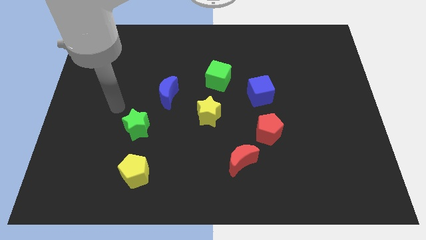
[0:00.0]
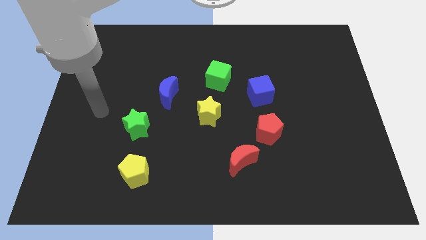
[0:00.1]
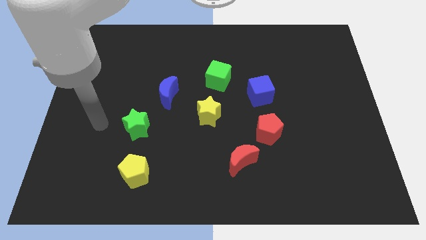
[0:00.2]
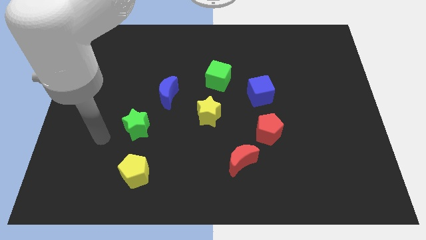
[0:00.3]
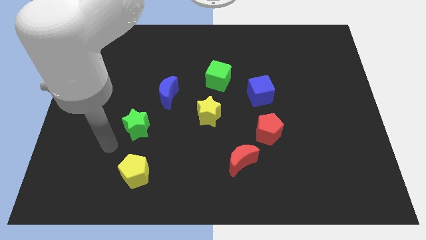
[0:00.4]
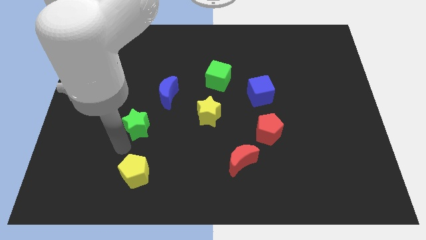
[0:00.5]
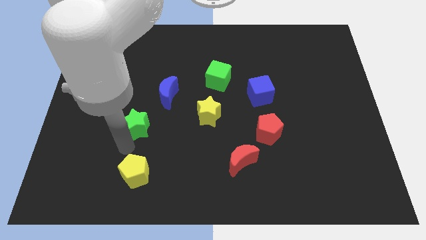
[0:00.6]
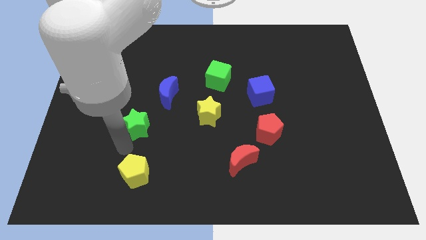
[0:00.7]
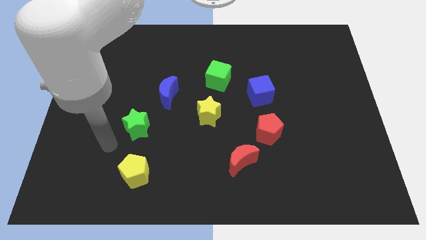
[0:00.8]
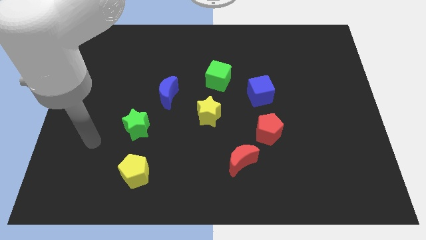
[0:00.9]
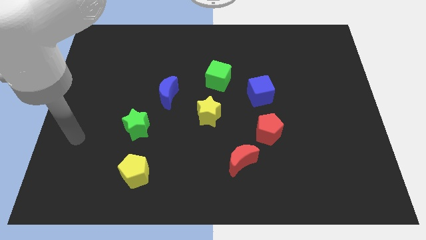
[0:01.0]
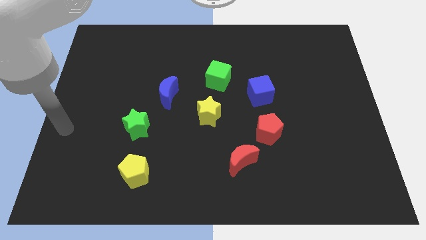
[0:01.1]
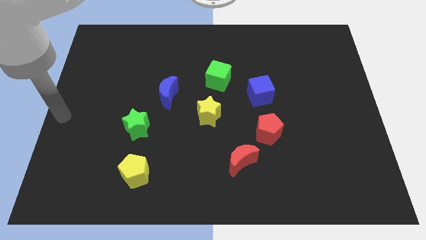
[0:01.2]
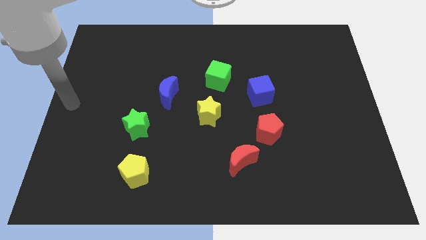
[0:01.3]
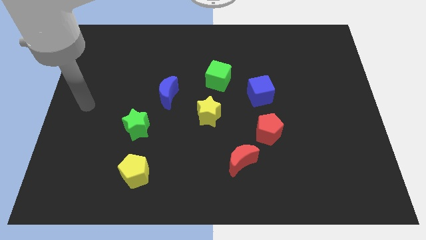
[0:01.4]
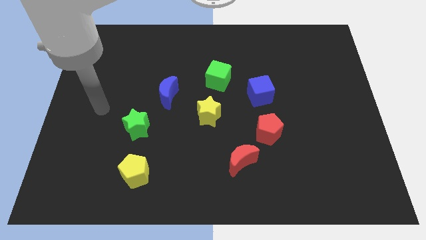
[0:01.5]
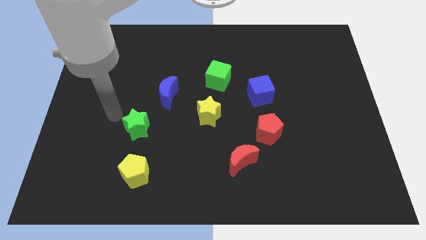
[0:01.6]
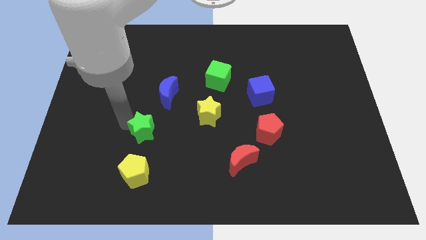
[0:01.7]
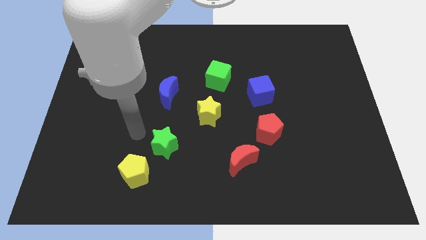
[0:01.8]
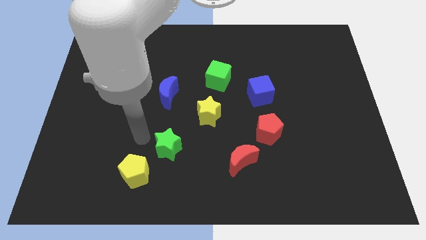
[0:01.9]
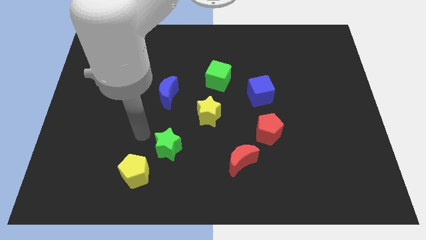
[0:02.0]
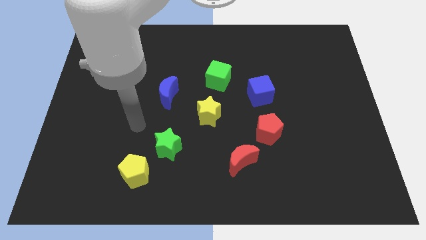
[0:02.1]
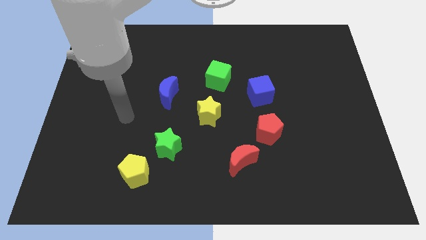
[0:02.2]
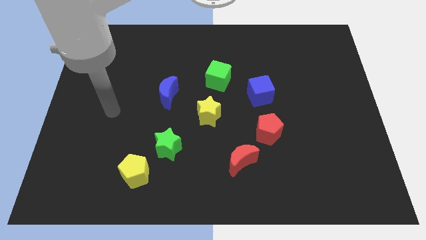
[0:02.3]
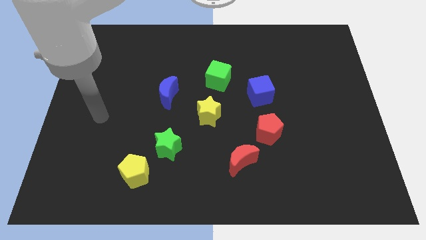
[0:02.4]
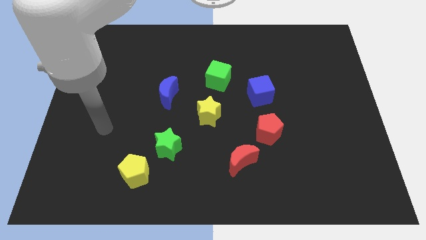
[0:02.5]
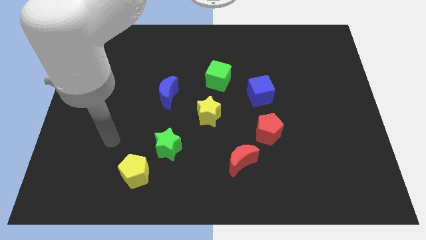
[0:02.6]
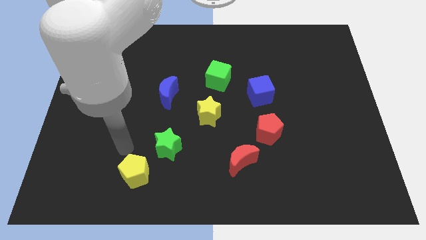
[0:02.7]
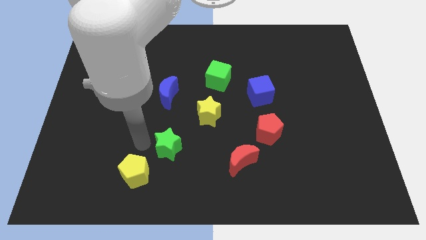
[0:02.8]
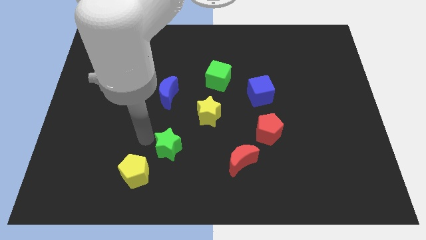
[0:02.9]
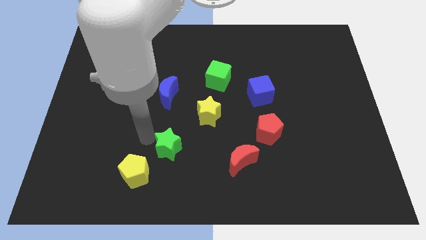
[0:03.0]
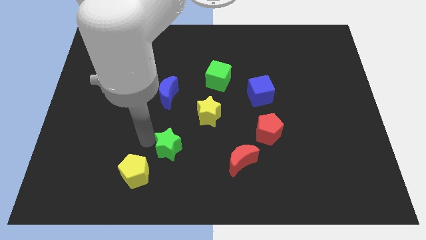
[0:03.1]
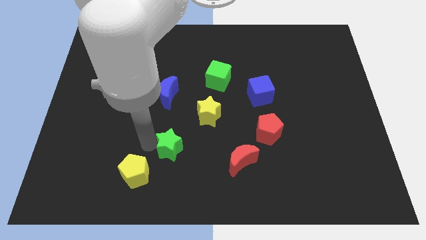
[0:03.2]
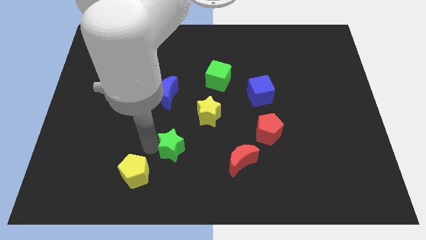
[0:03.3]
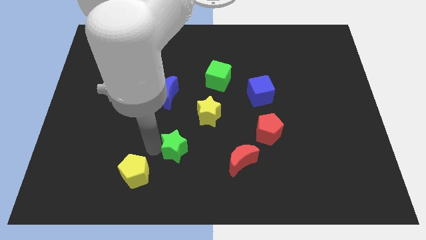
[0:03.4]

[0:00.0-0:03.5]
place the green star between yellow pentagon and yellow star

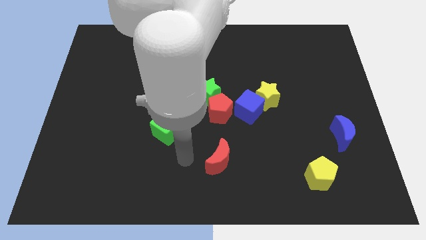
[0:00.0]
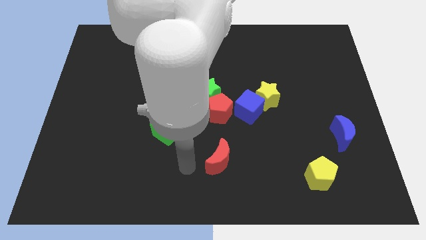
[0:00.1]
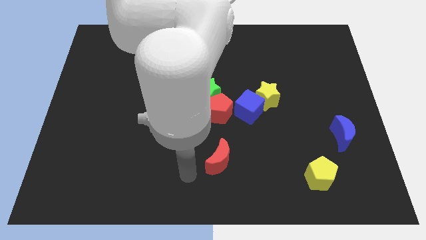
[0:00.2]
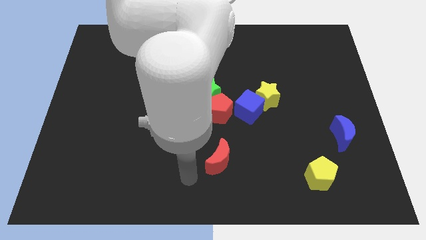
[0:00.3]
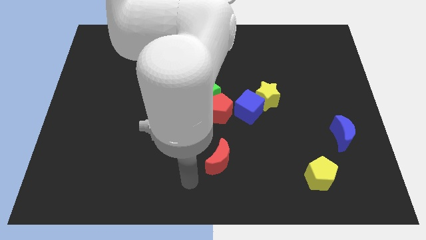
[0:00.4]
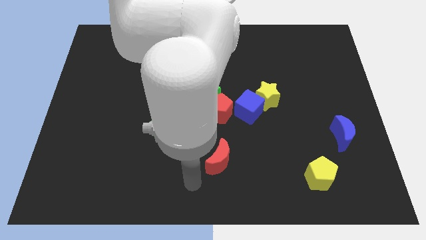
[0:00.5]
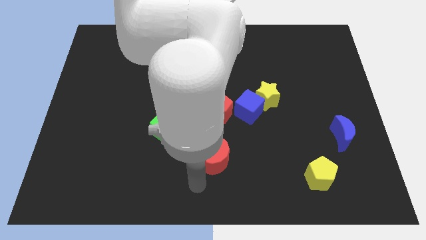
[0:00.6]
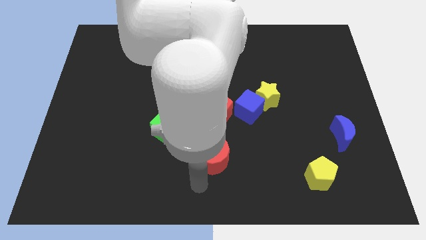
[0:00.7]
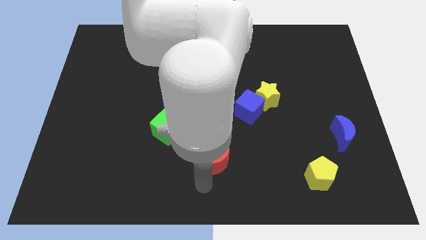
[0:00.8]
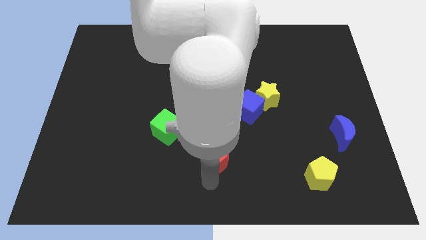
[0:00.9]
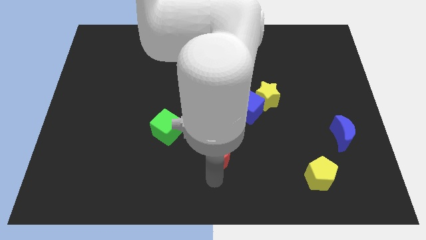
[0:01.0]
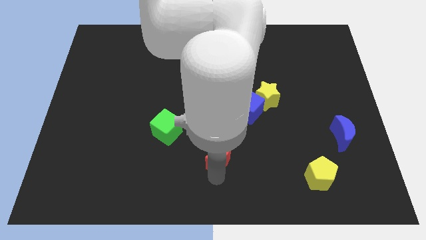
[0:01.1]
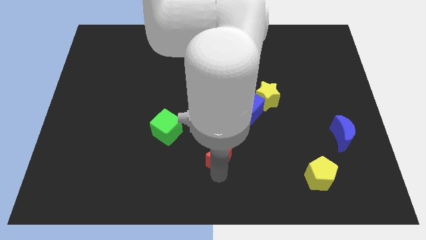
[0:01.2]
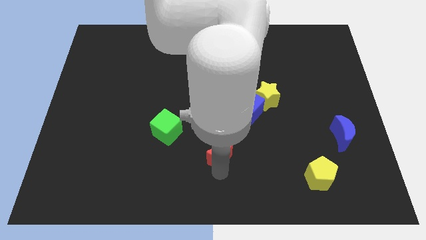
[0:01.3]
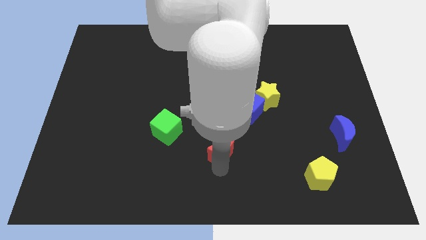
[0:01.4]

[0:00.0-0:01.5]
slide the red moon slightly up

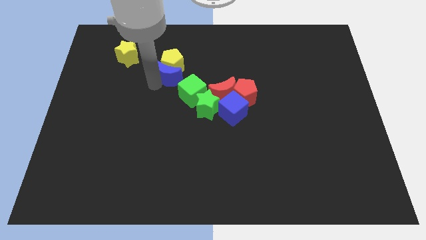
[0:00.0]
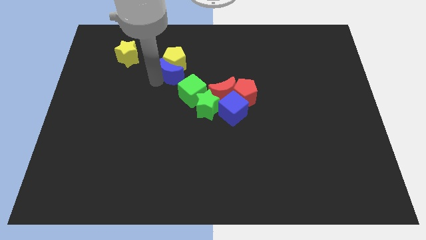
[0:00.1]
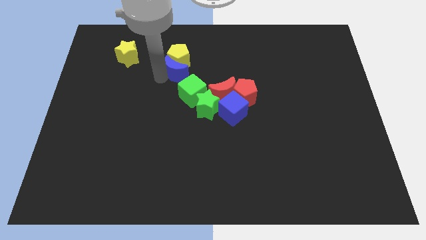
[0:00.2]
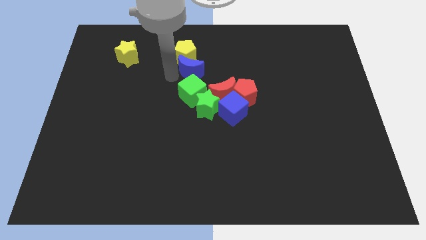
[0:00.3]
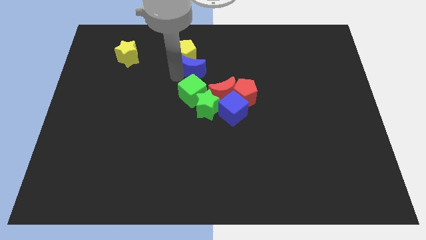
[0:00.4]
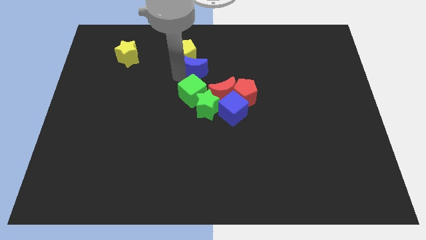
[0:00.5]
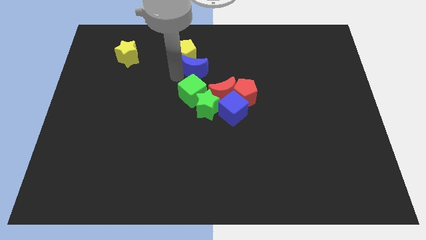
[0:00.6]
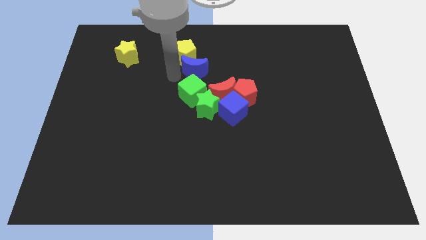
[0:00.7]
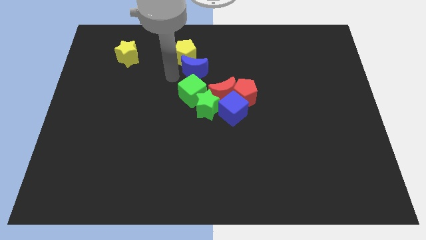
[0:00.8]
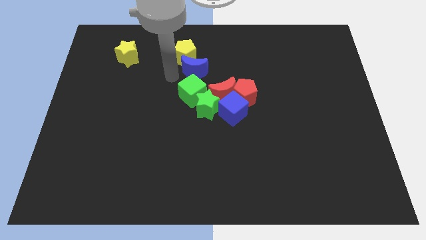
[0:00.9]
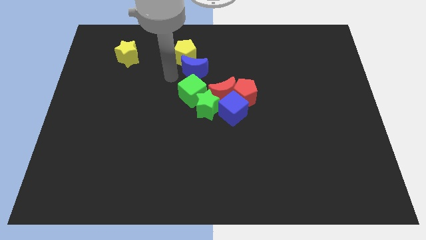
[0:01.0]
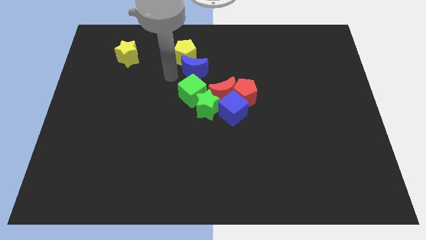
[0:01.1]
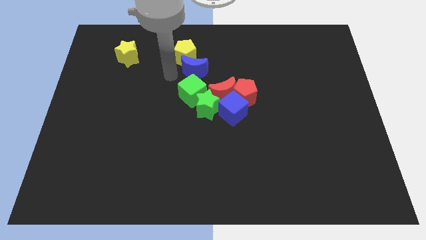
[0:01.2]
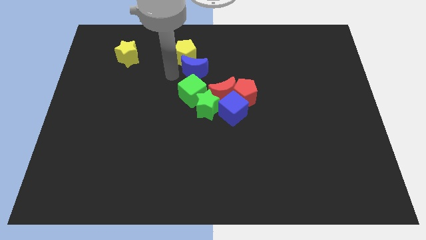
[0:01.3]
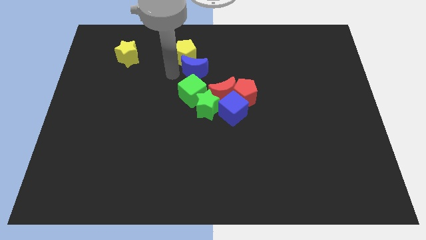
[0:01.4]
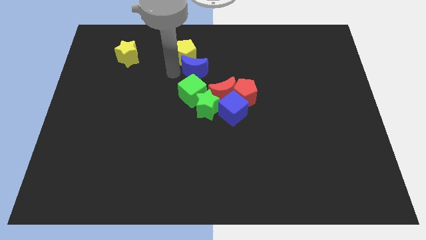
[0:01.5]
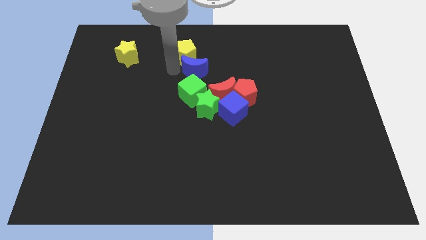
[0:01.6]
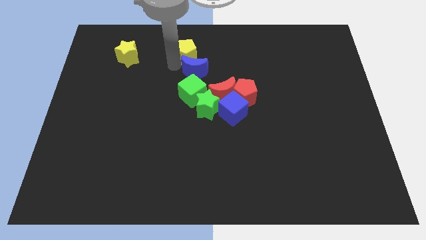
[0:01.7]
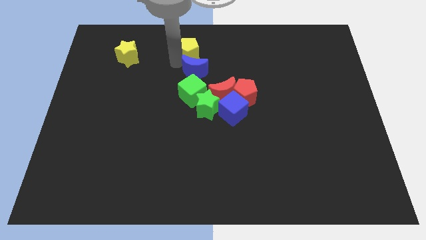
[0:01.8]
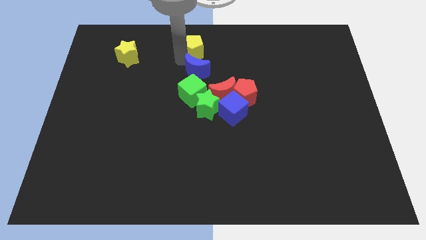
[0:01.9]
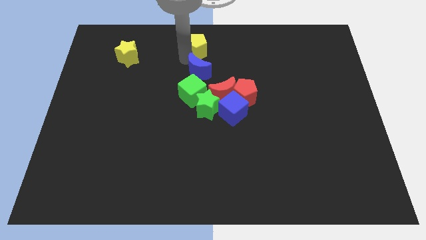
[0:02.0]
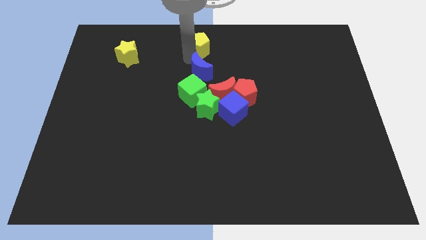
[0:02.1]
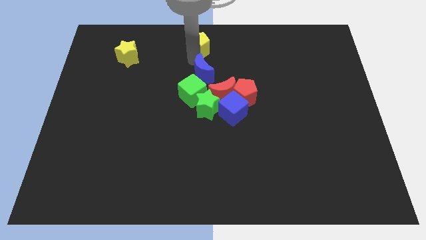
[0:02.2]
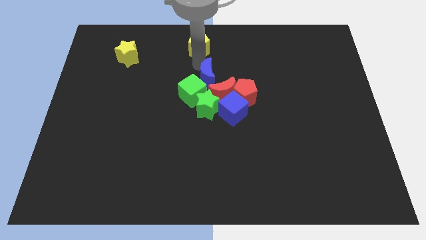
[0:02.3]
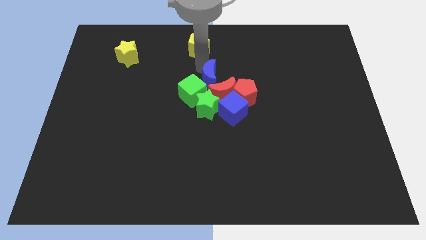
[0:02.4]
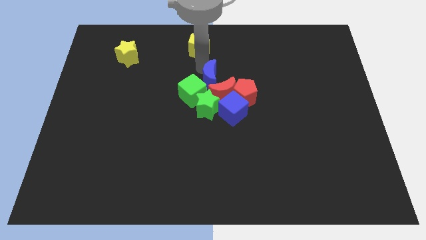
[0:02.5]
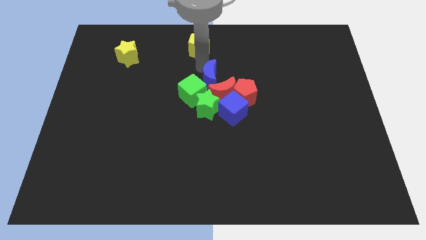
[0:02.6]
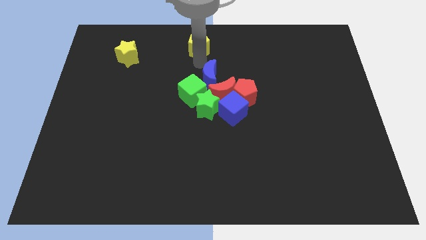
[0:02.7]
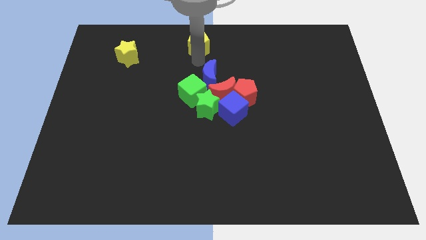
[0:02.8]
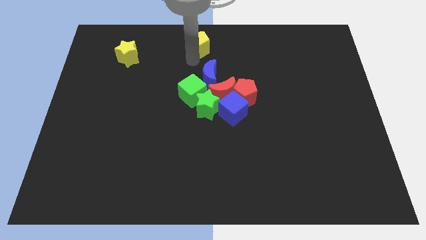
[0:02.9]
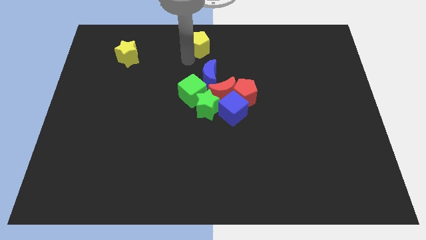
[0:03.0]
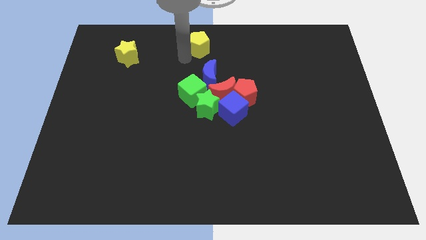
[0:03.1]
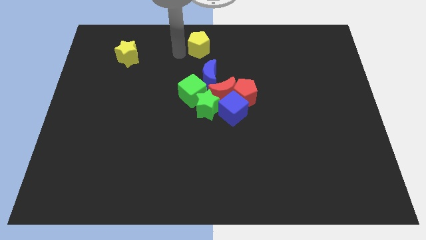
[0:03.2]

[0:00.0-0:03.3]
separate the yellow pentagon and the blue crescent

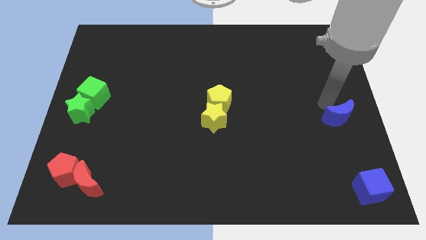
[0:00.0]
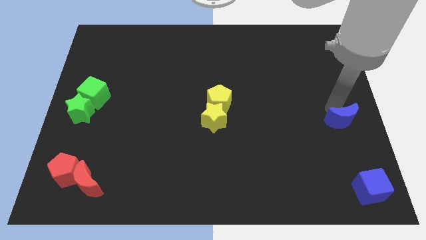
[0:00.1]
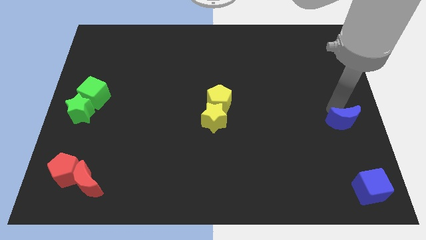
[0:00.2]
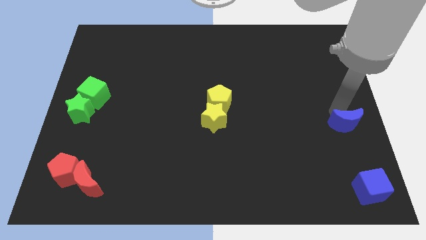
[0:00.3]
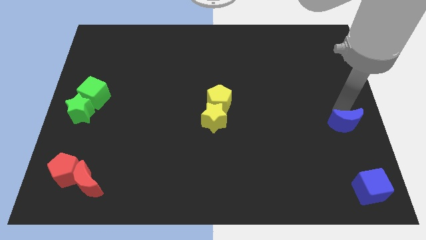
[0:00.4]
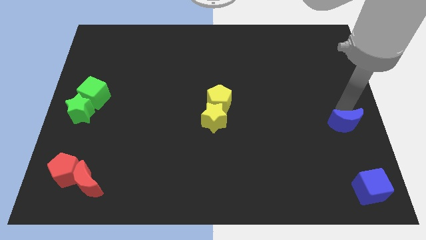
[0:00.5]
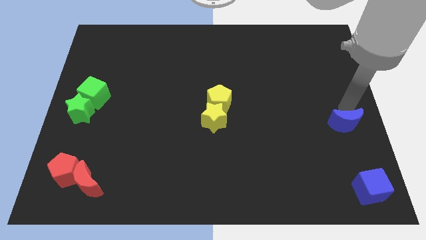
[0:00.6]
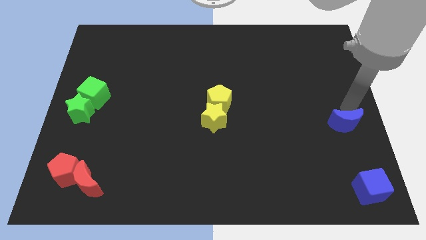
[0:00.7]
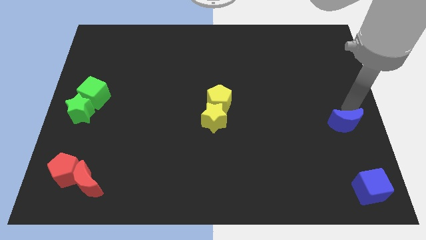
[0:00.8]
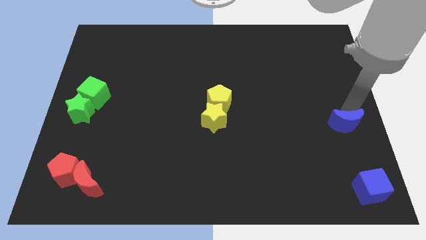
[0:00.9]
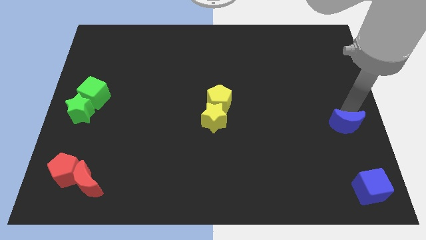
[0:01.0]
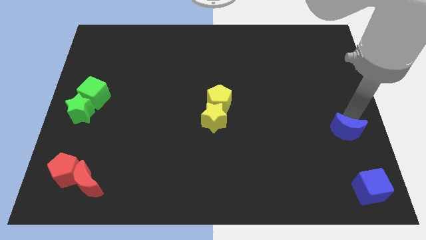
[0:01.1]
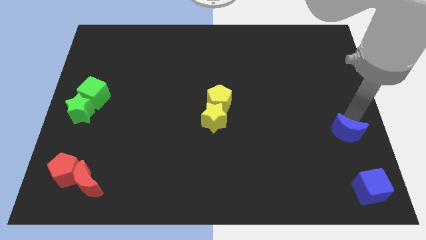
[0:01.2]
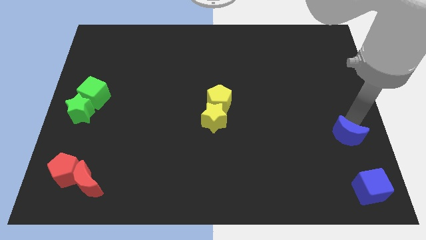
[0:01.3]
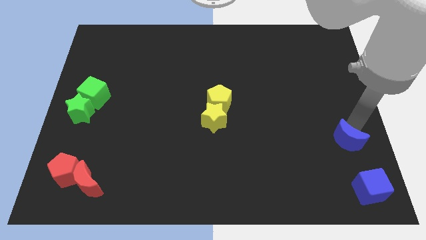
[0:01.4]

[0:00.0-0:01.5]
move the blue moon slightly towards the blue cube
